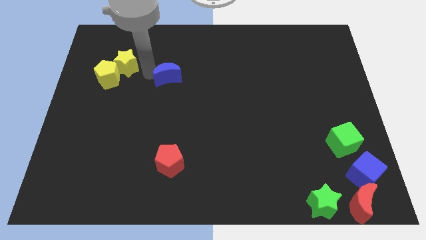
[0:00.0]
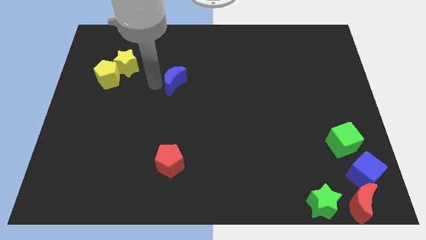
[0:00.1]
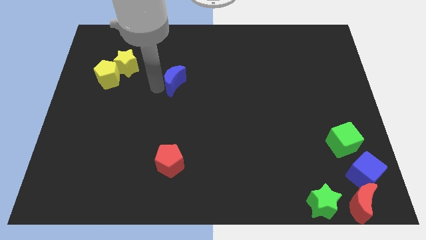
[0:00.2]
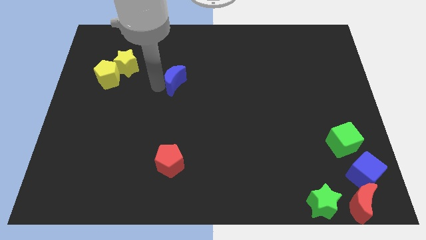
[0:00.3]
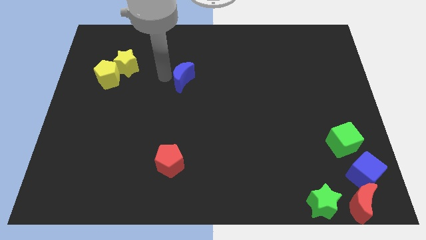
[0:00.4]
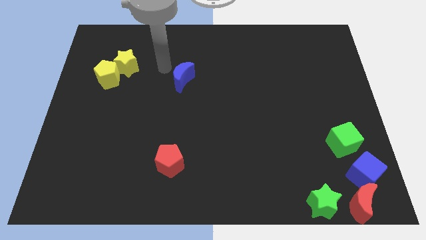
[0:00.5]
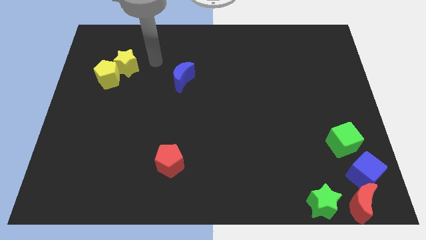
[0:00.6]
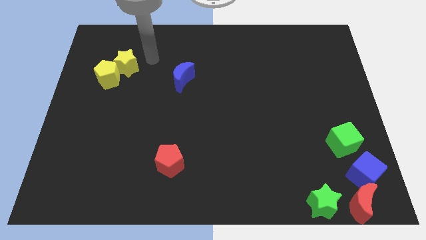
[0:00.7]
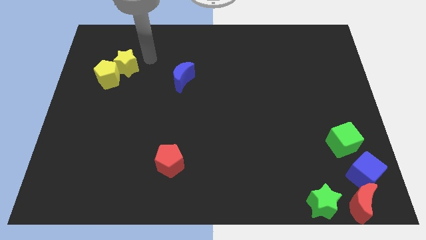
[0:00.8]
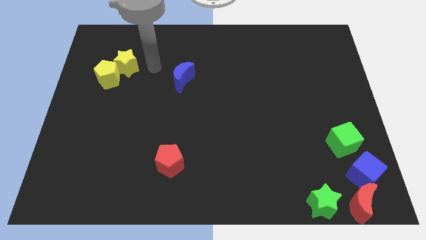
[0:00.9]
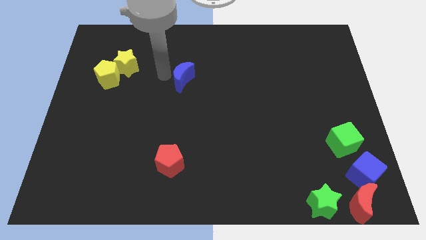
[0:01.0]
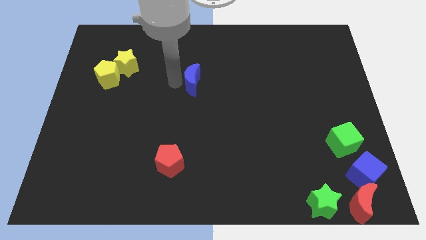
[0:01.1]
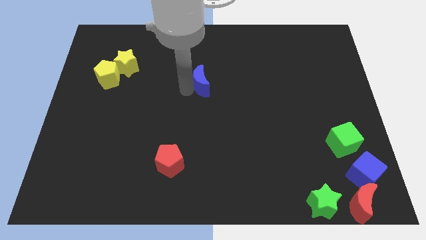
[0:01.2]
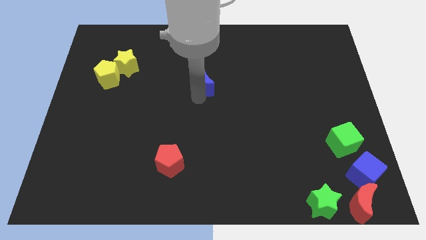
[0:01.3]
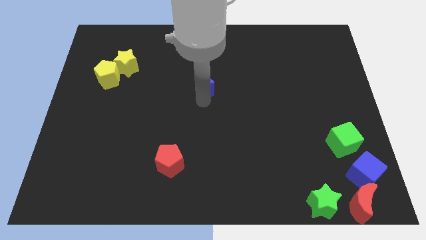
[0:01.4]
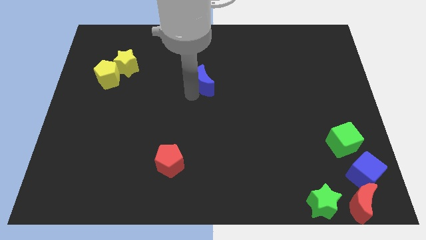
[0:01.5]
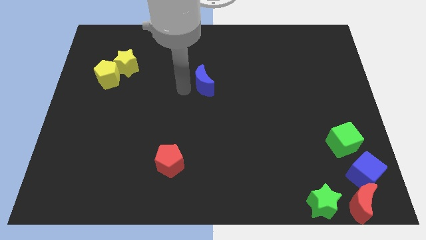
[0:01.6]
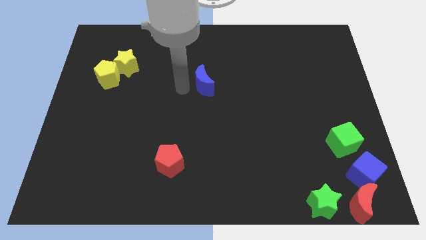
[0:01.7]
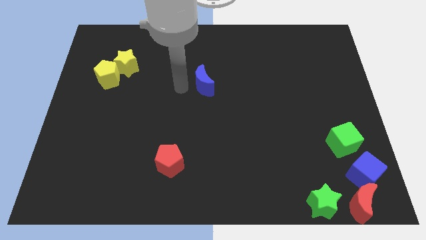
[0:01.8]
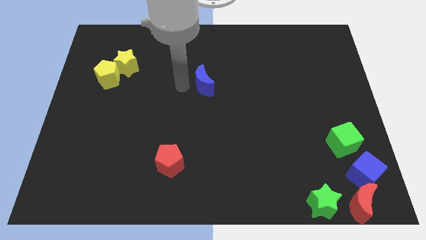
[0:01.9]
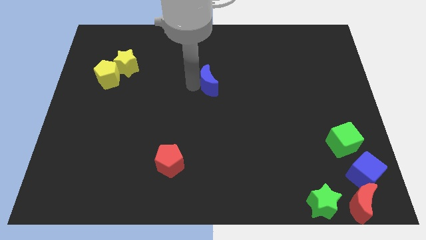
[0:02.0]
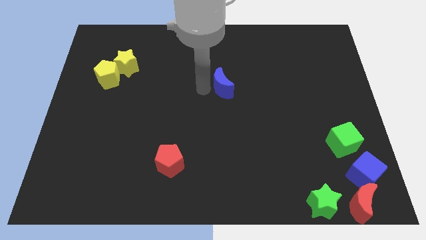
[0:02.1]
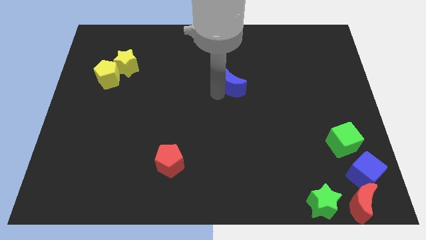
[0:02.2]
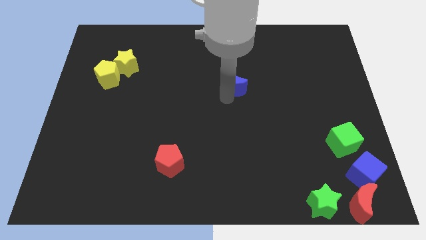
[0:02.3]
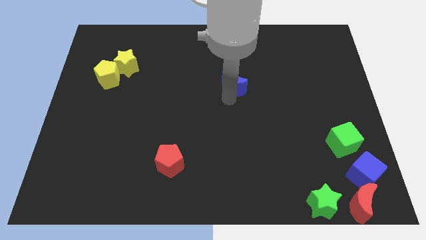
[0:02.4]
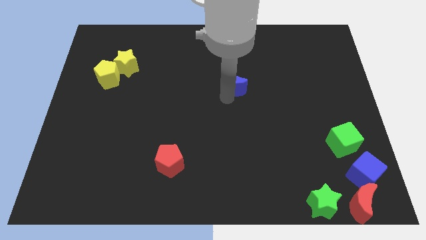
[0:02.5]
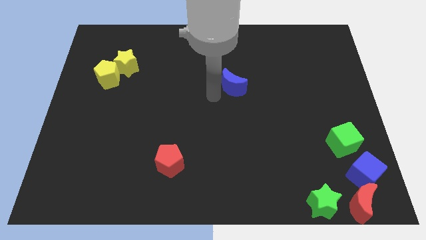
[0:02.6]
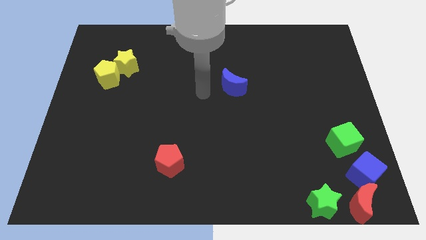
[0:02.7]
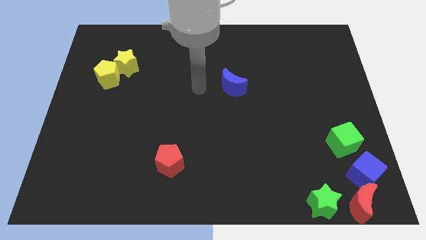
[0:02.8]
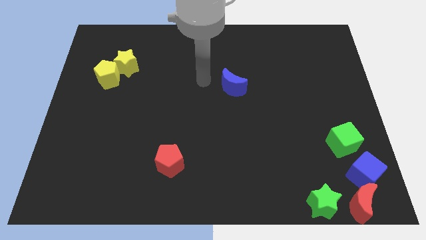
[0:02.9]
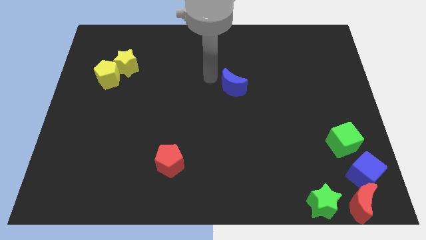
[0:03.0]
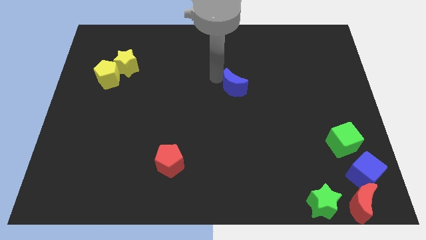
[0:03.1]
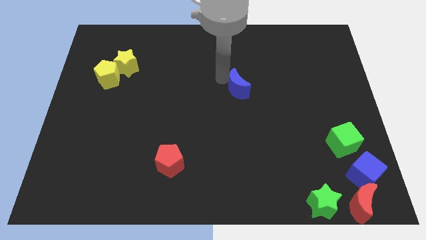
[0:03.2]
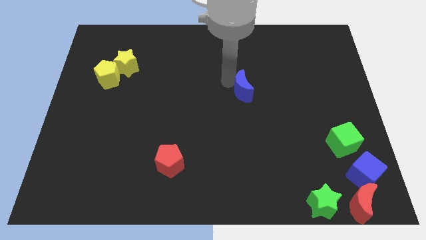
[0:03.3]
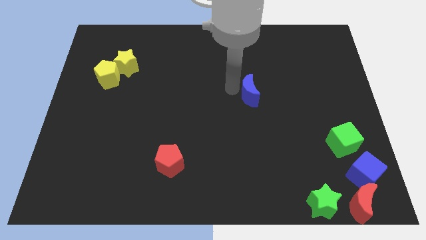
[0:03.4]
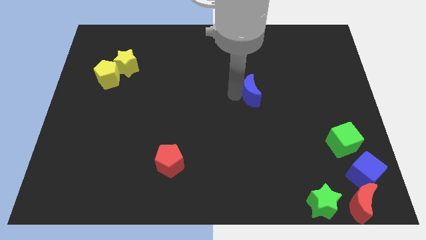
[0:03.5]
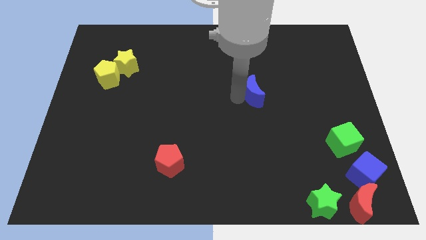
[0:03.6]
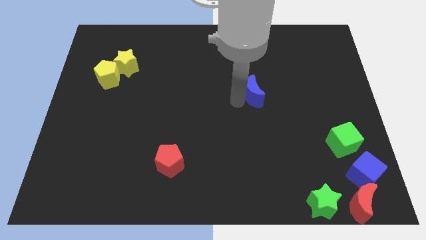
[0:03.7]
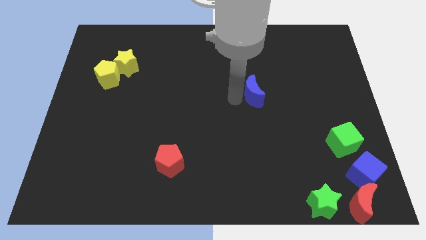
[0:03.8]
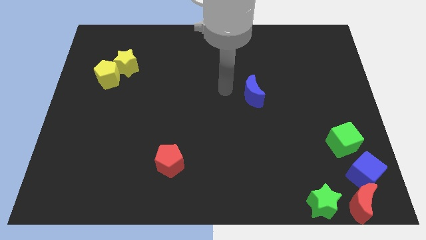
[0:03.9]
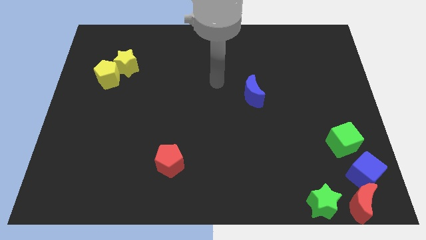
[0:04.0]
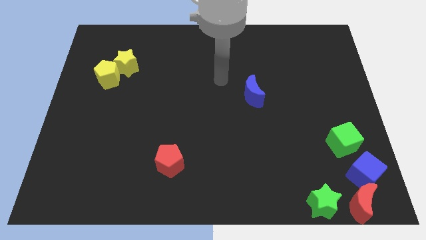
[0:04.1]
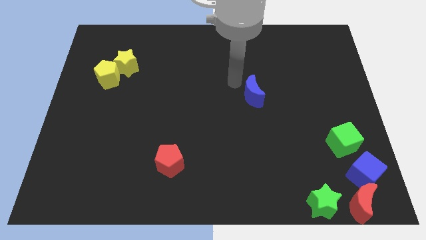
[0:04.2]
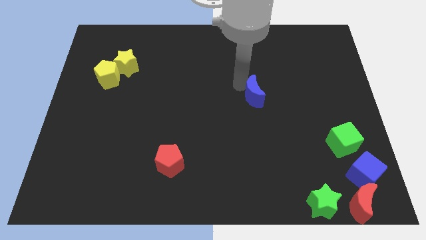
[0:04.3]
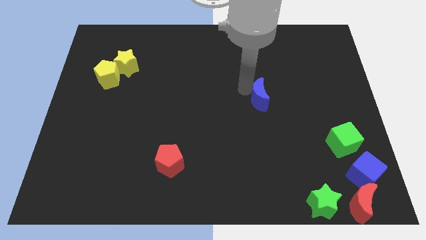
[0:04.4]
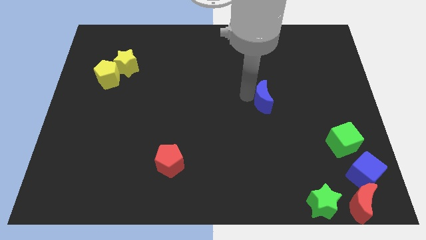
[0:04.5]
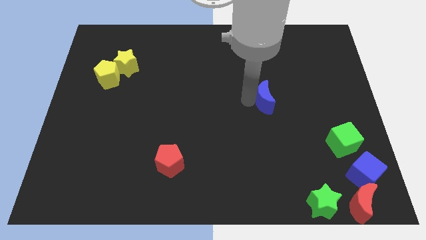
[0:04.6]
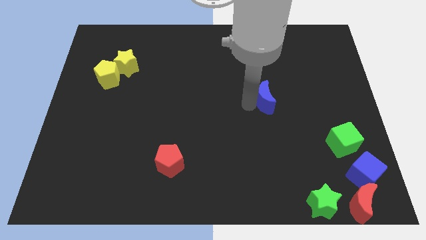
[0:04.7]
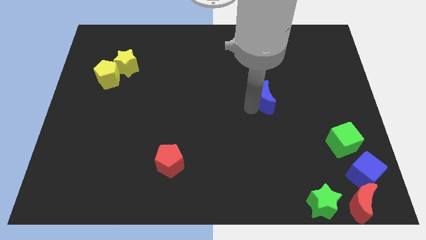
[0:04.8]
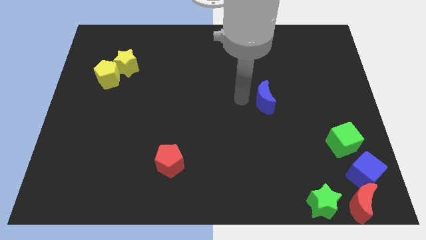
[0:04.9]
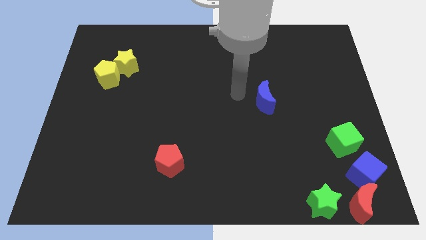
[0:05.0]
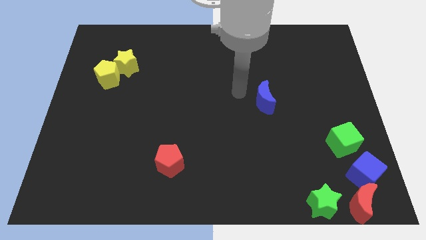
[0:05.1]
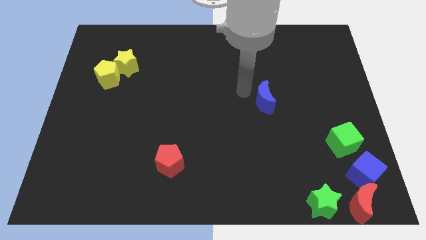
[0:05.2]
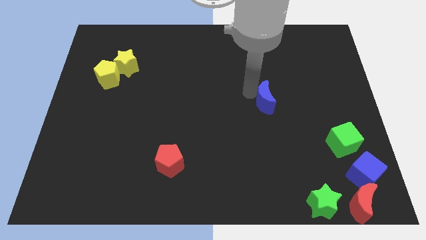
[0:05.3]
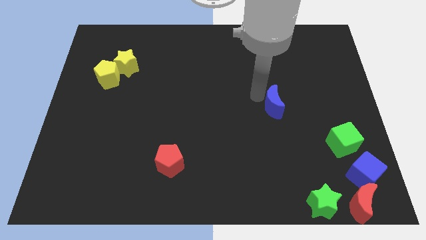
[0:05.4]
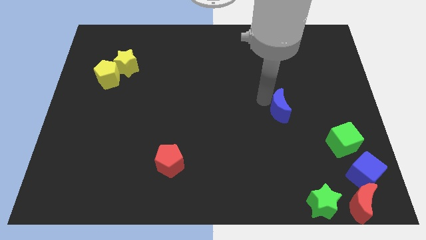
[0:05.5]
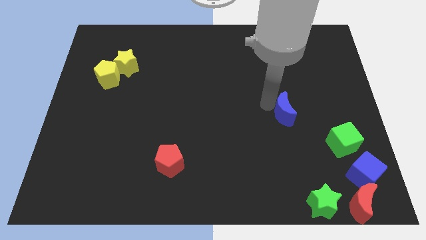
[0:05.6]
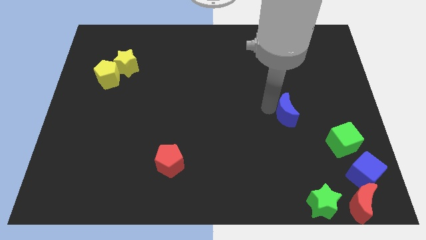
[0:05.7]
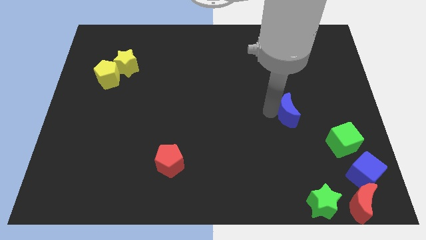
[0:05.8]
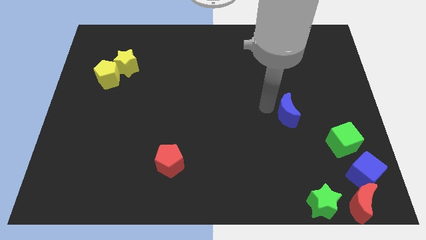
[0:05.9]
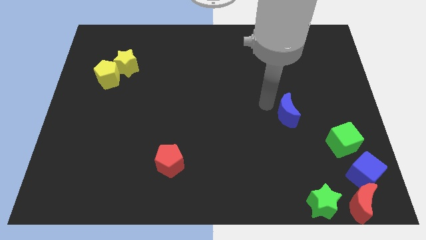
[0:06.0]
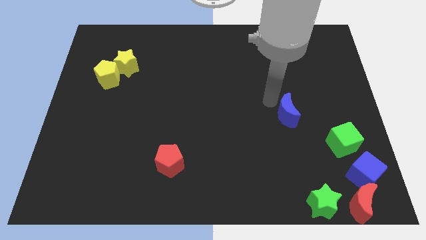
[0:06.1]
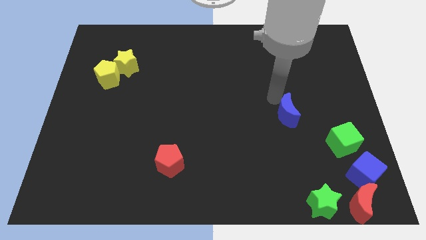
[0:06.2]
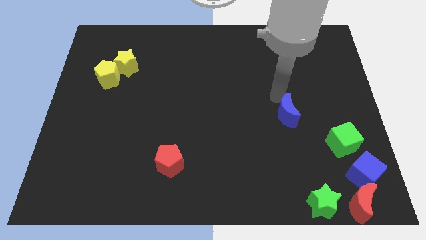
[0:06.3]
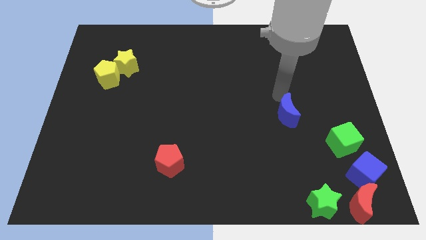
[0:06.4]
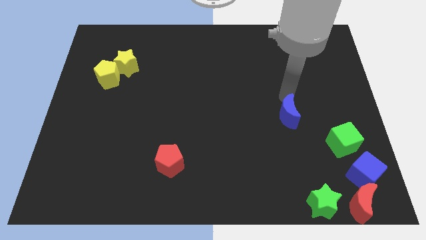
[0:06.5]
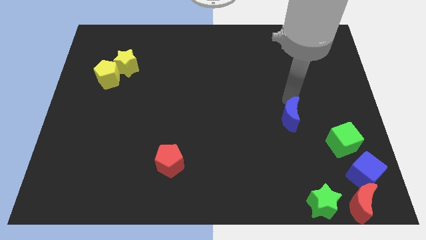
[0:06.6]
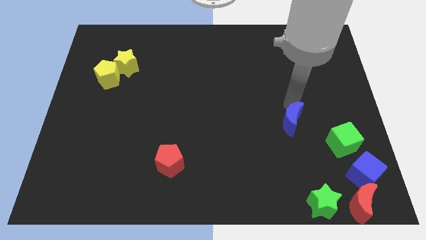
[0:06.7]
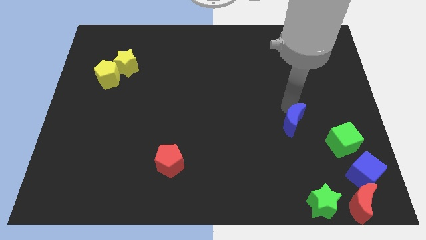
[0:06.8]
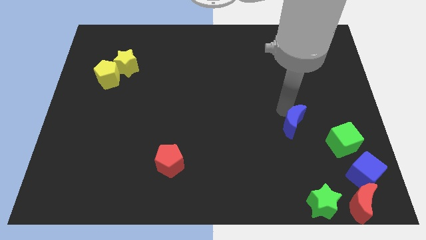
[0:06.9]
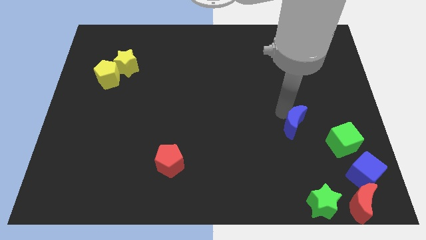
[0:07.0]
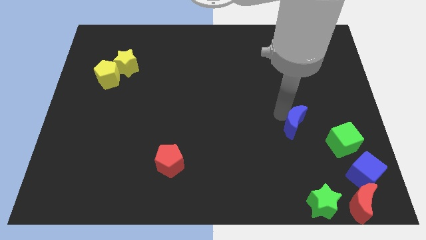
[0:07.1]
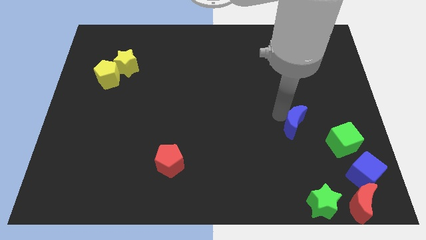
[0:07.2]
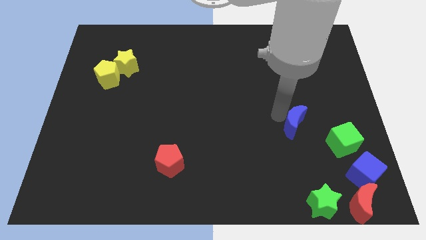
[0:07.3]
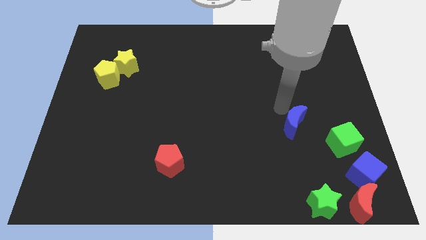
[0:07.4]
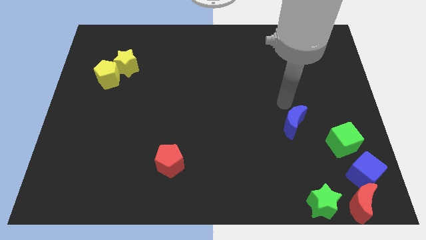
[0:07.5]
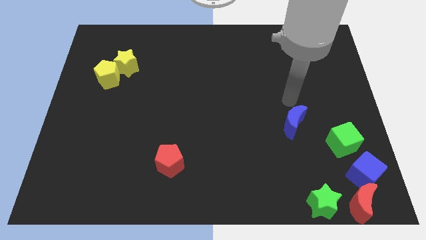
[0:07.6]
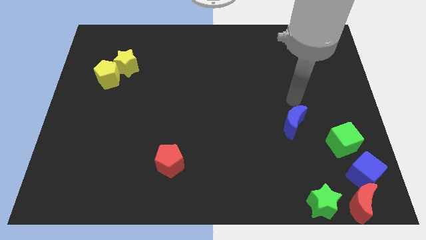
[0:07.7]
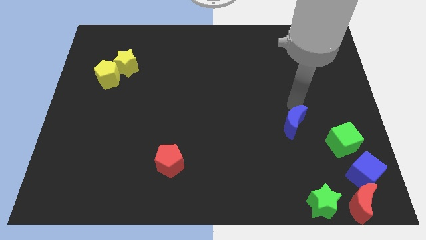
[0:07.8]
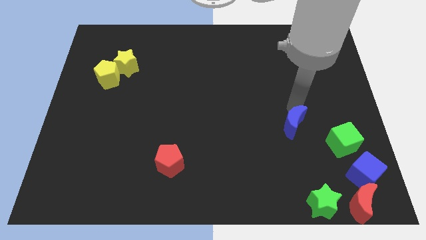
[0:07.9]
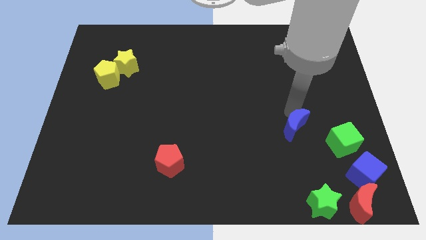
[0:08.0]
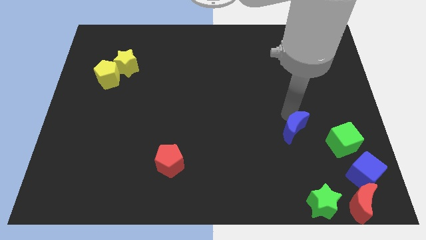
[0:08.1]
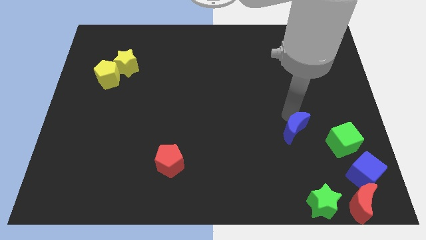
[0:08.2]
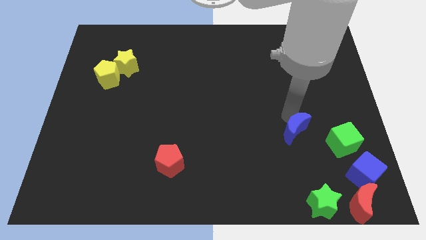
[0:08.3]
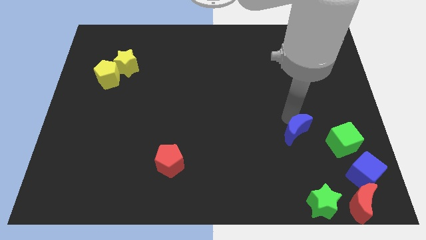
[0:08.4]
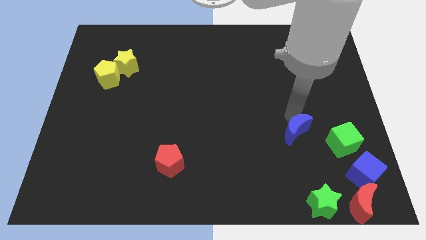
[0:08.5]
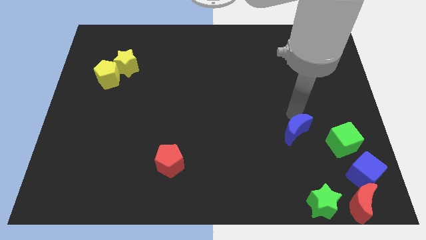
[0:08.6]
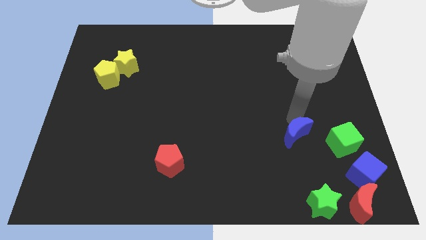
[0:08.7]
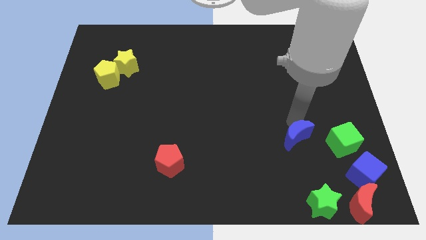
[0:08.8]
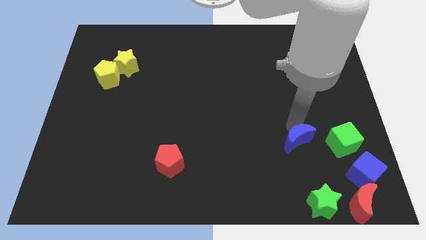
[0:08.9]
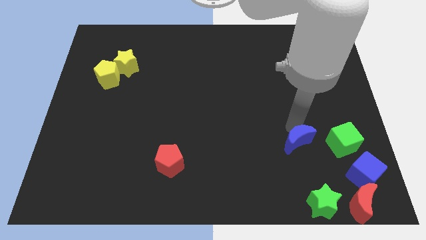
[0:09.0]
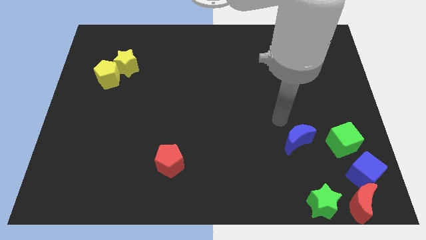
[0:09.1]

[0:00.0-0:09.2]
place the blue crescent to the left of green cube
